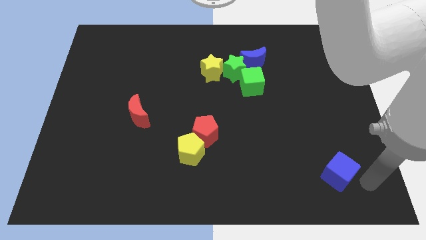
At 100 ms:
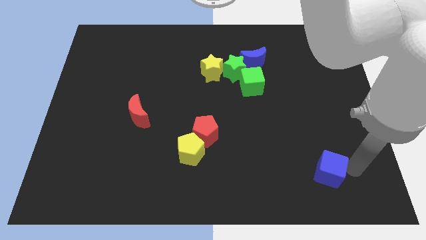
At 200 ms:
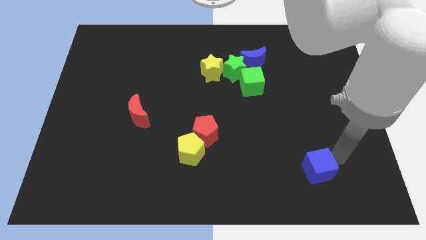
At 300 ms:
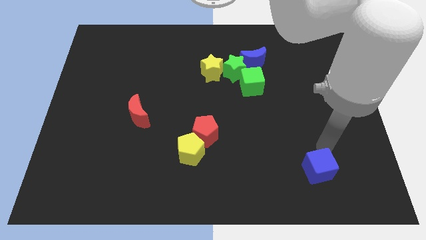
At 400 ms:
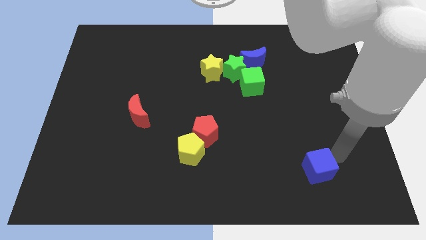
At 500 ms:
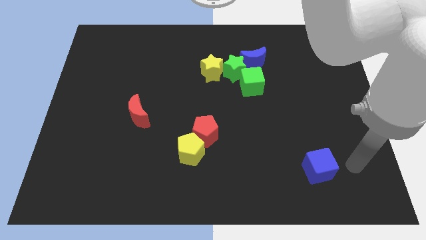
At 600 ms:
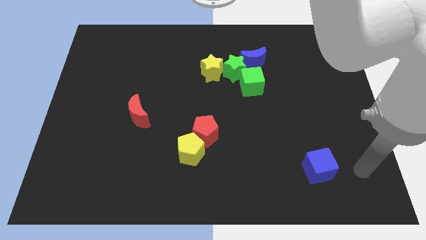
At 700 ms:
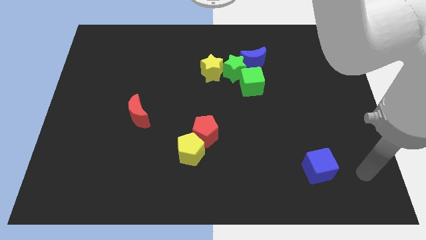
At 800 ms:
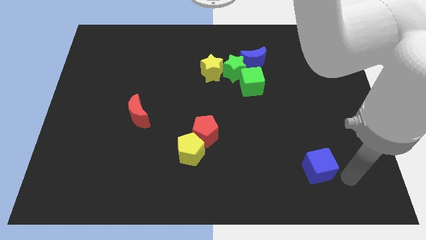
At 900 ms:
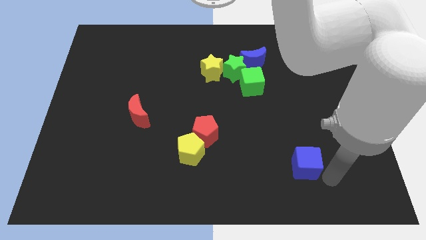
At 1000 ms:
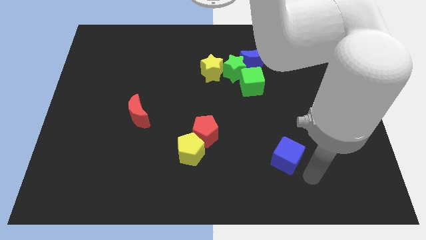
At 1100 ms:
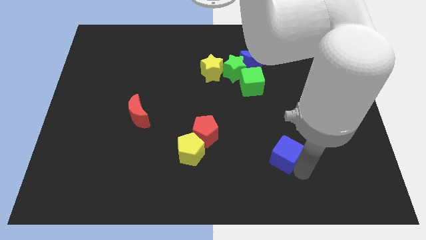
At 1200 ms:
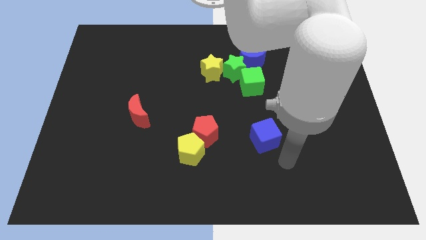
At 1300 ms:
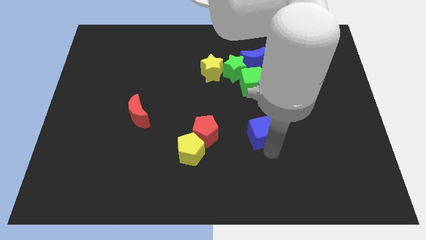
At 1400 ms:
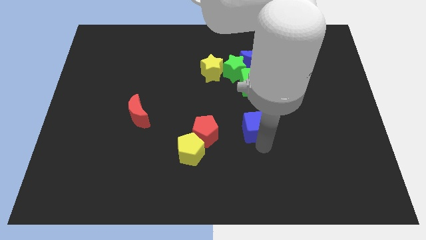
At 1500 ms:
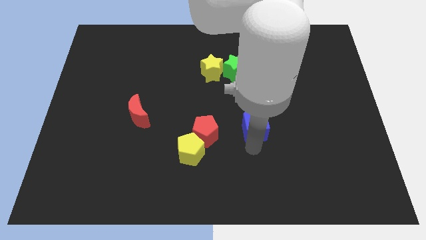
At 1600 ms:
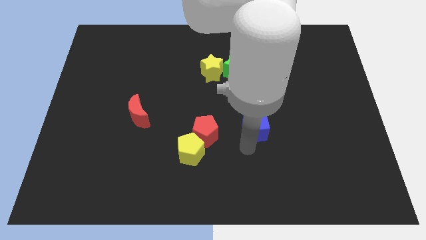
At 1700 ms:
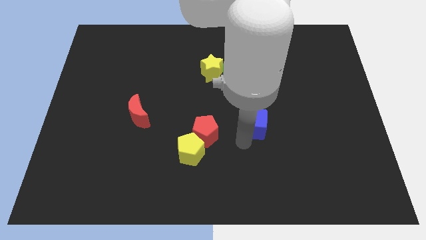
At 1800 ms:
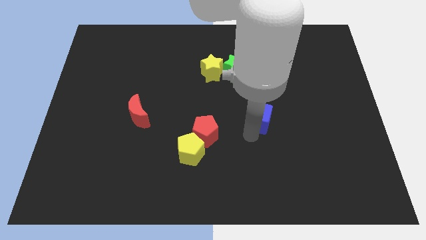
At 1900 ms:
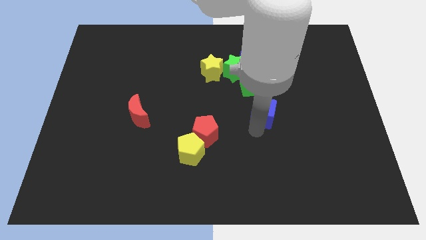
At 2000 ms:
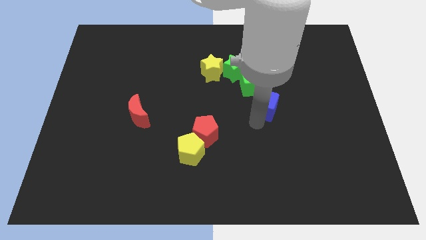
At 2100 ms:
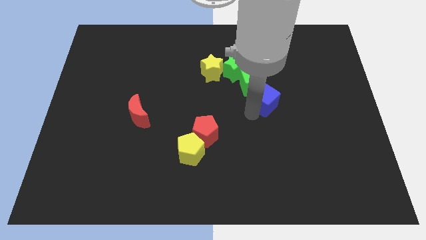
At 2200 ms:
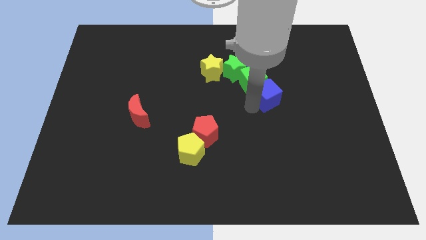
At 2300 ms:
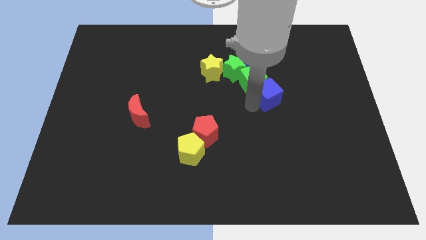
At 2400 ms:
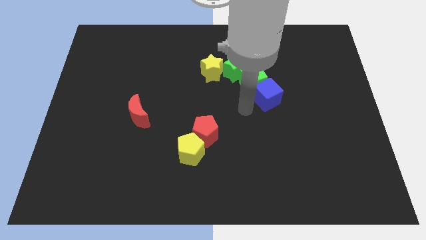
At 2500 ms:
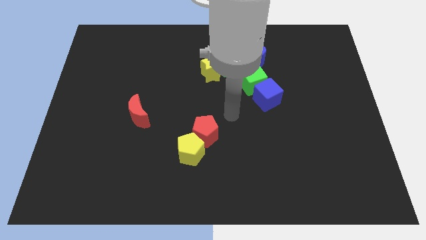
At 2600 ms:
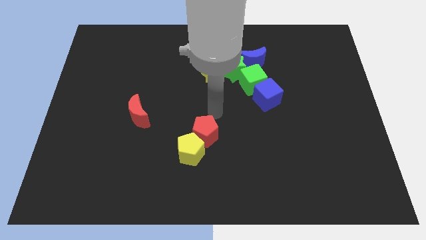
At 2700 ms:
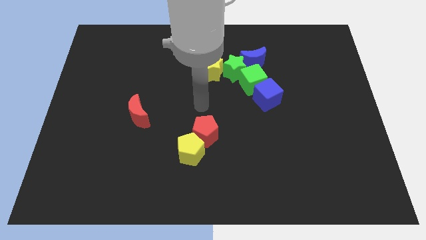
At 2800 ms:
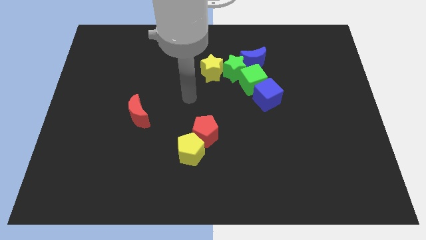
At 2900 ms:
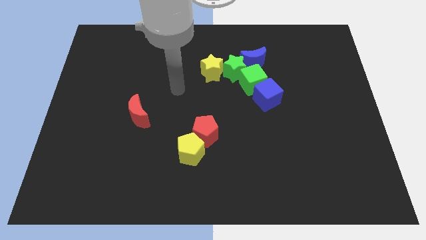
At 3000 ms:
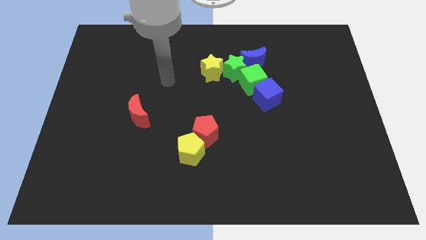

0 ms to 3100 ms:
push blue cube to the back of green cube

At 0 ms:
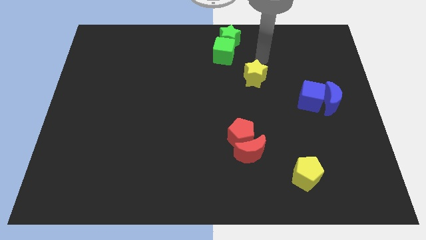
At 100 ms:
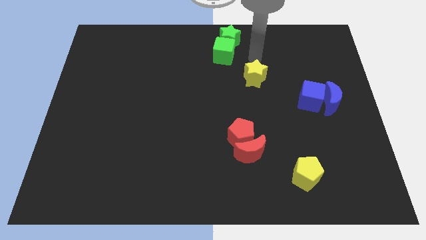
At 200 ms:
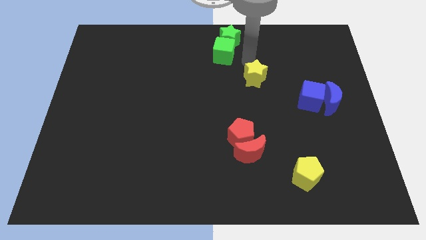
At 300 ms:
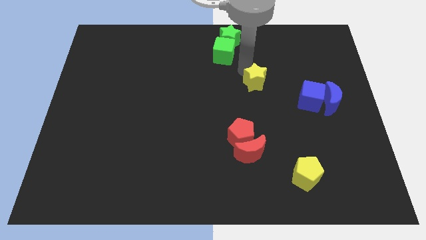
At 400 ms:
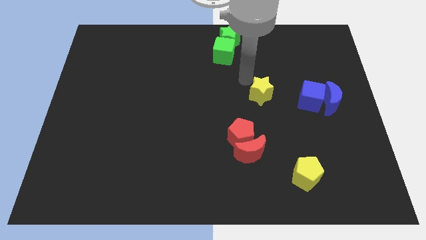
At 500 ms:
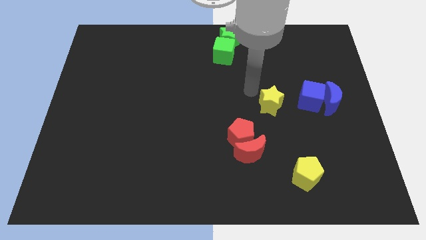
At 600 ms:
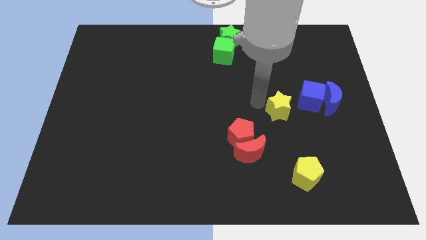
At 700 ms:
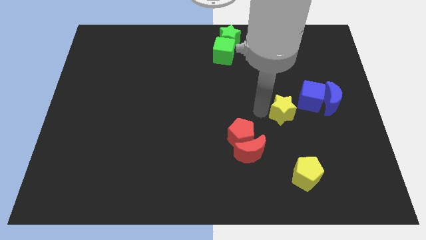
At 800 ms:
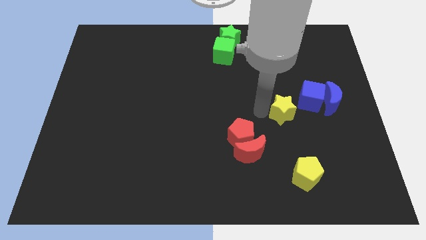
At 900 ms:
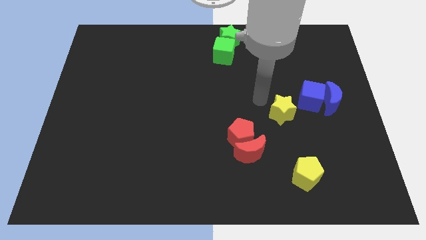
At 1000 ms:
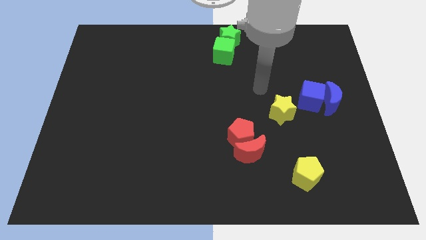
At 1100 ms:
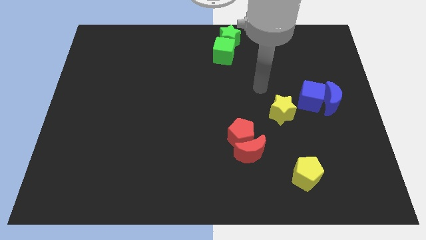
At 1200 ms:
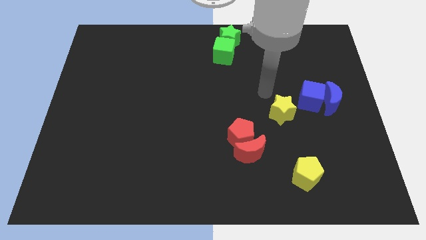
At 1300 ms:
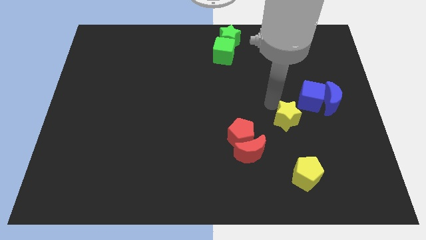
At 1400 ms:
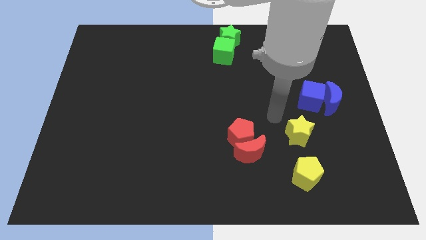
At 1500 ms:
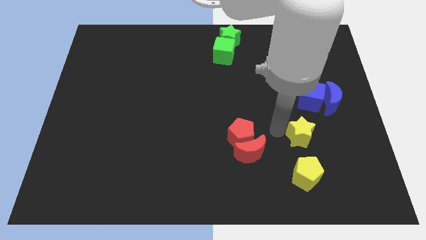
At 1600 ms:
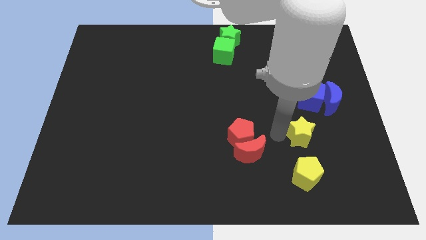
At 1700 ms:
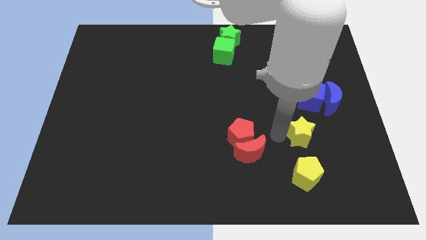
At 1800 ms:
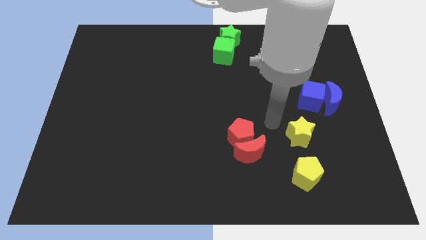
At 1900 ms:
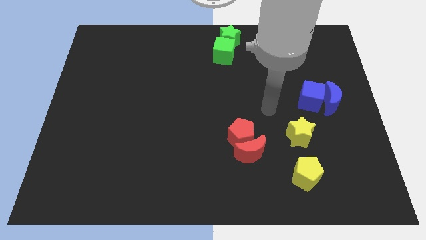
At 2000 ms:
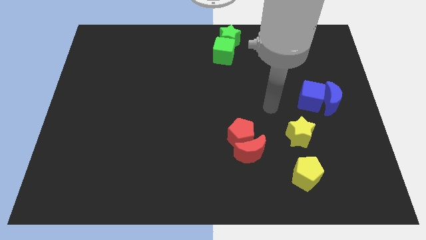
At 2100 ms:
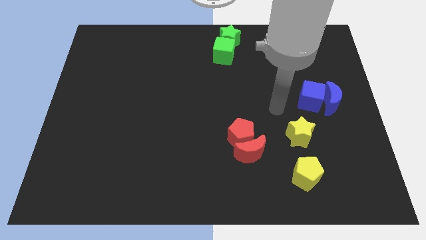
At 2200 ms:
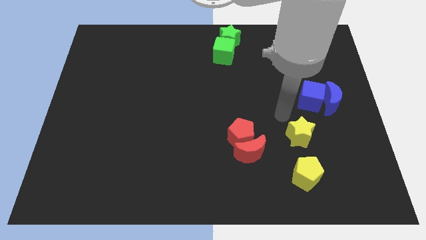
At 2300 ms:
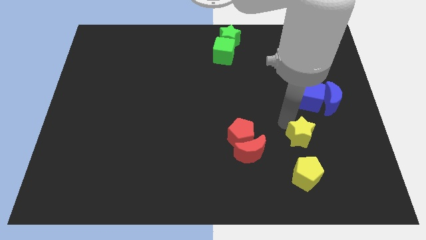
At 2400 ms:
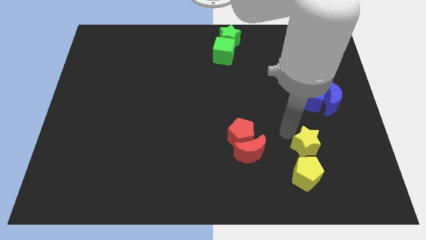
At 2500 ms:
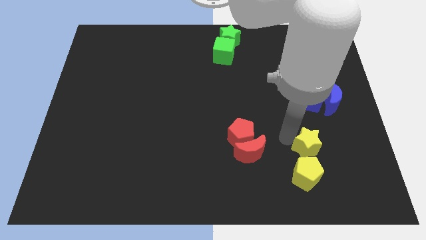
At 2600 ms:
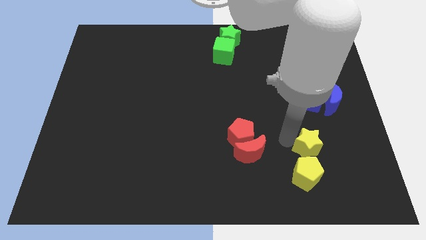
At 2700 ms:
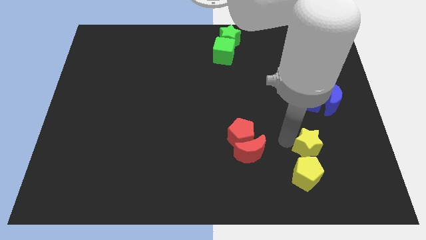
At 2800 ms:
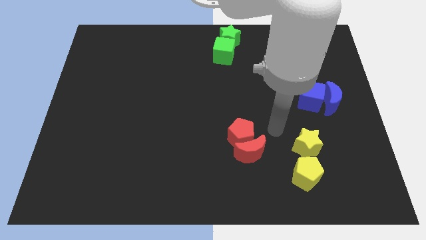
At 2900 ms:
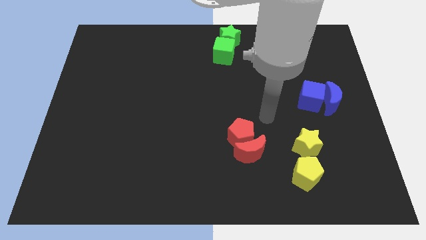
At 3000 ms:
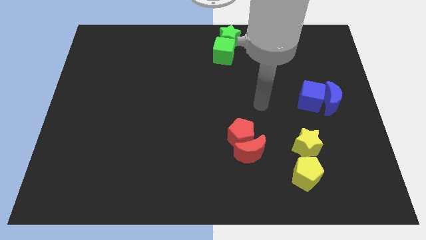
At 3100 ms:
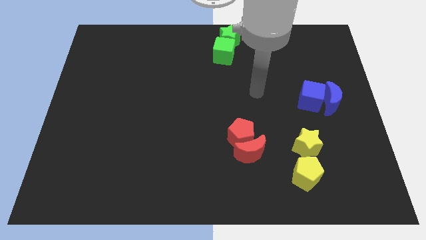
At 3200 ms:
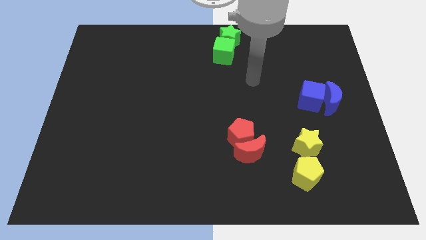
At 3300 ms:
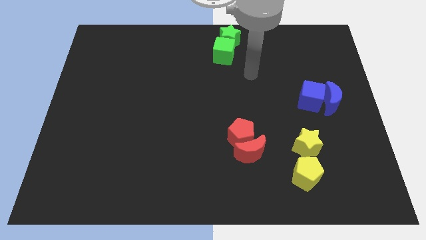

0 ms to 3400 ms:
push the yellow star vertically on top of the yellow pentagon

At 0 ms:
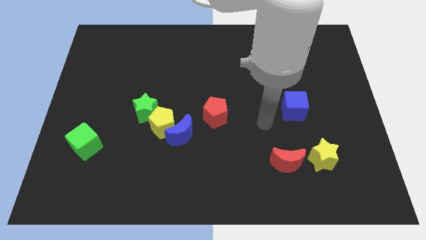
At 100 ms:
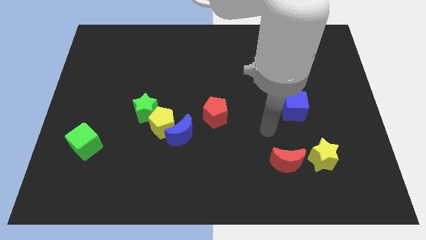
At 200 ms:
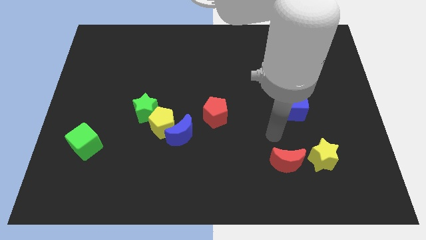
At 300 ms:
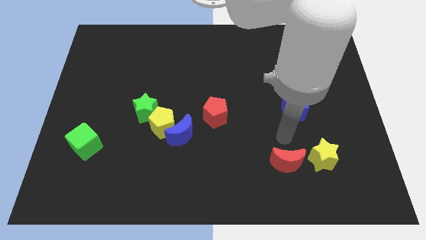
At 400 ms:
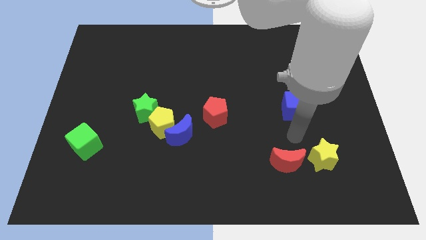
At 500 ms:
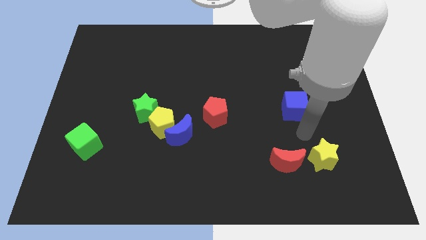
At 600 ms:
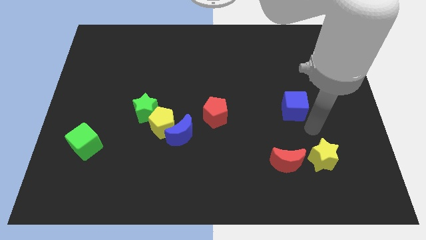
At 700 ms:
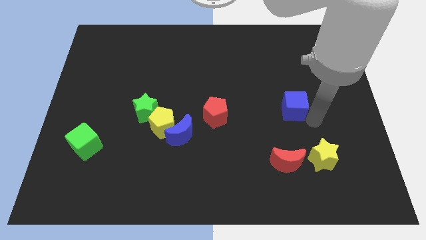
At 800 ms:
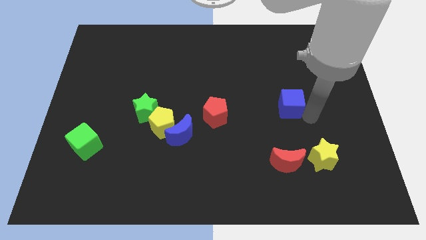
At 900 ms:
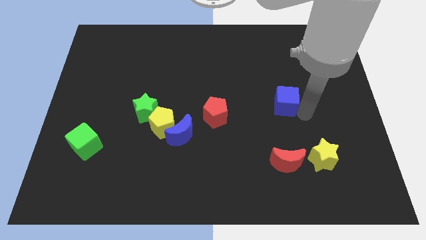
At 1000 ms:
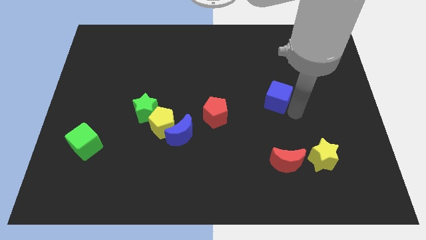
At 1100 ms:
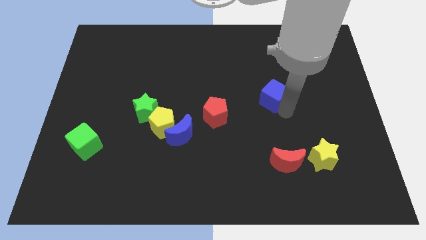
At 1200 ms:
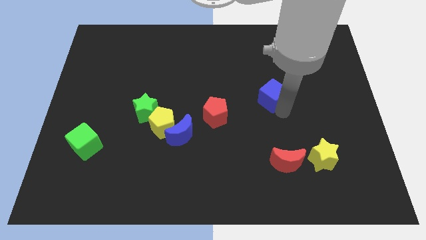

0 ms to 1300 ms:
slightly push blue cube towards its top

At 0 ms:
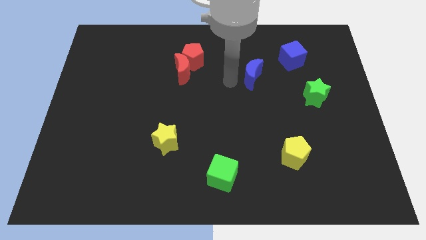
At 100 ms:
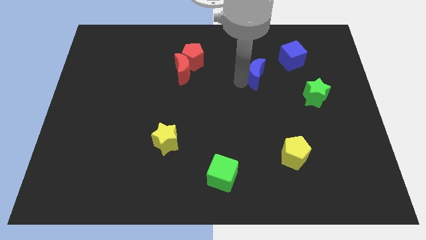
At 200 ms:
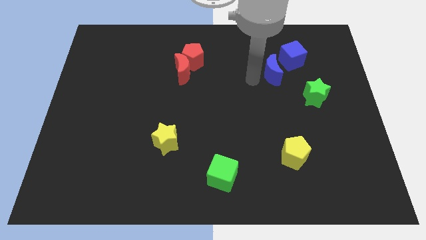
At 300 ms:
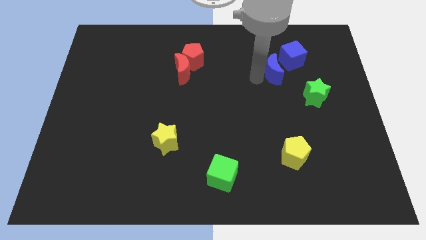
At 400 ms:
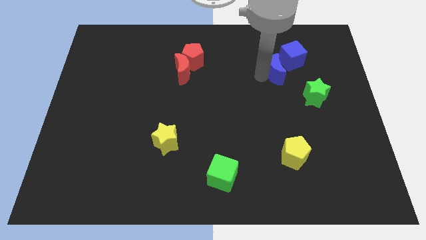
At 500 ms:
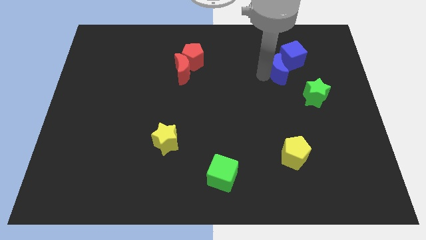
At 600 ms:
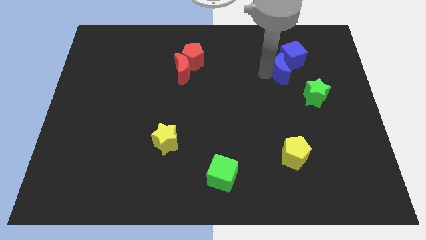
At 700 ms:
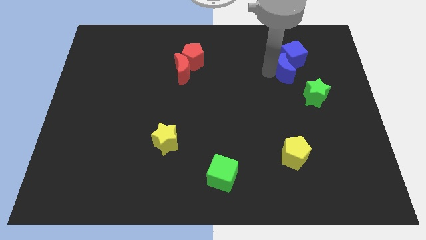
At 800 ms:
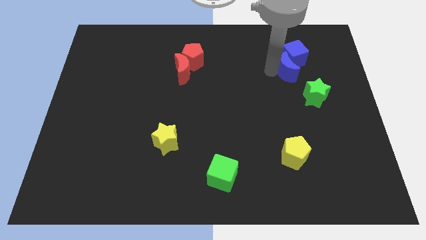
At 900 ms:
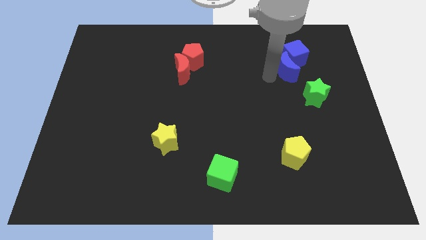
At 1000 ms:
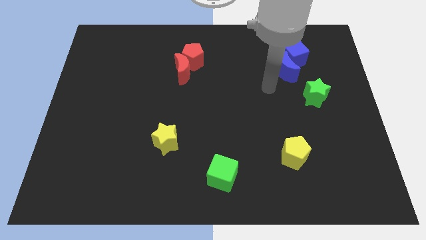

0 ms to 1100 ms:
place the blue moon close to the blue cube
